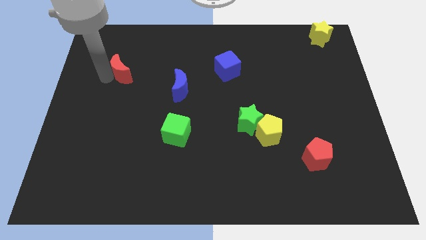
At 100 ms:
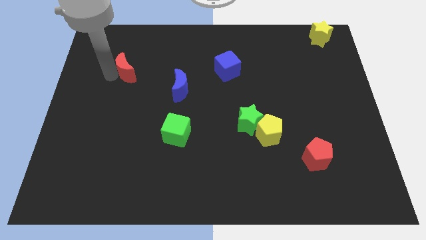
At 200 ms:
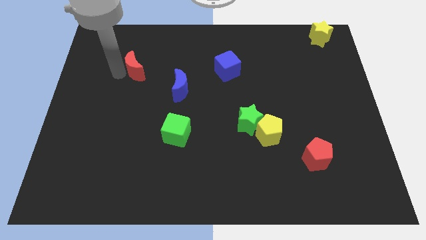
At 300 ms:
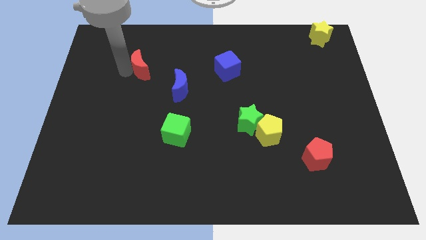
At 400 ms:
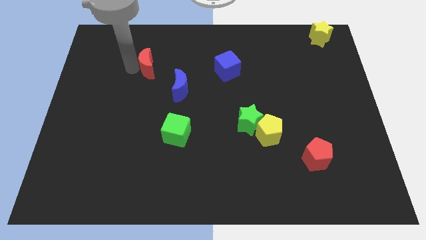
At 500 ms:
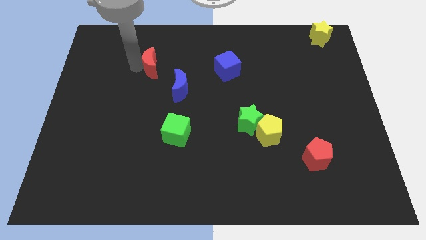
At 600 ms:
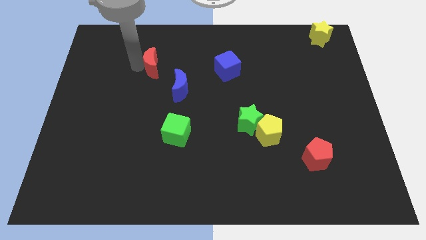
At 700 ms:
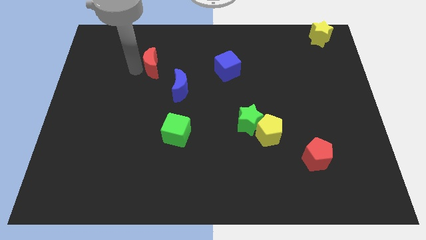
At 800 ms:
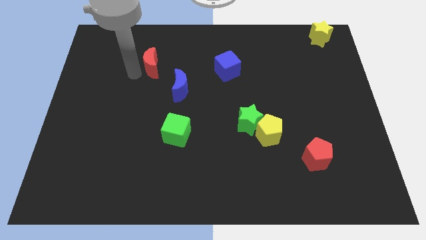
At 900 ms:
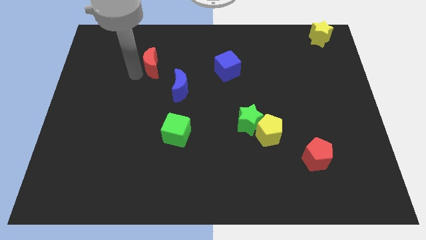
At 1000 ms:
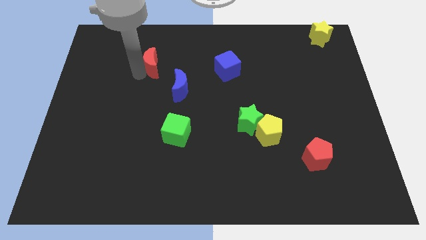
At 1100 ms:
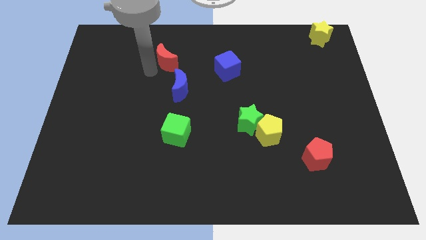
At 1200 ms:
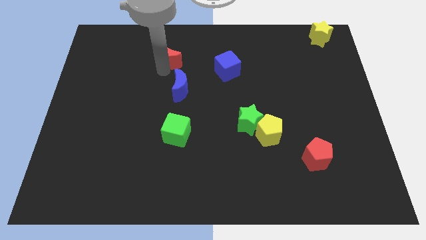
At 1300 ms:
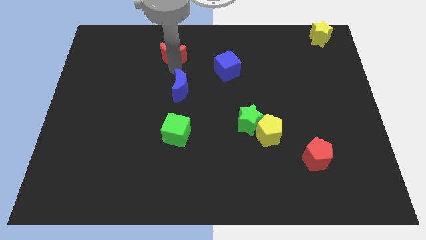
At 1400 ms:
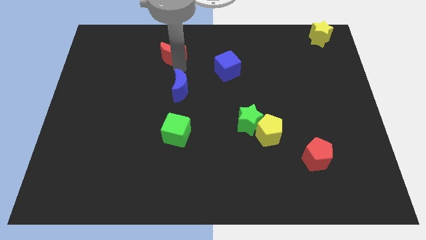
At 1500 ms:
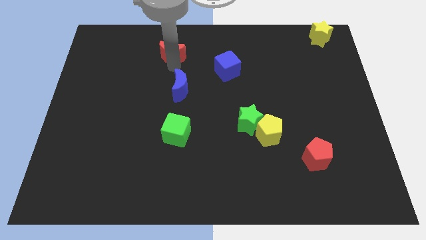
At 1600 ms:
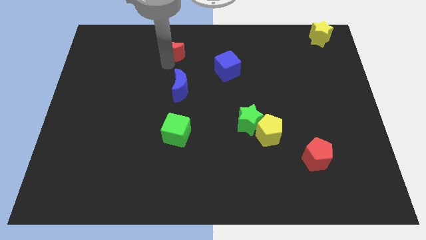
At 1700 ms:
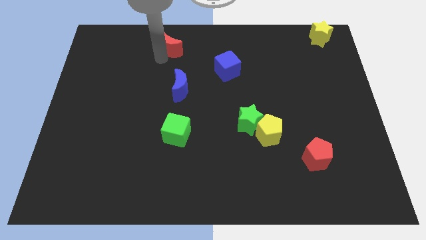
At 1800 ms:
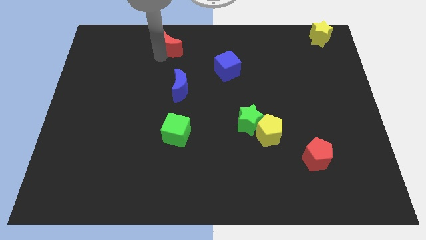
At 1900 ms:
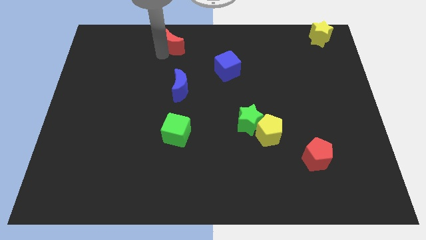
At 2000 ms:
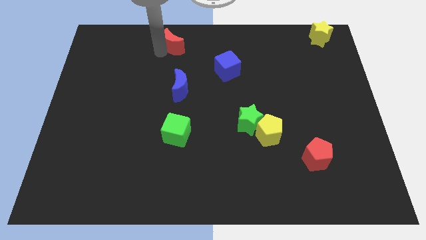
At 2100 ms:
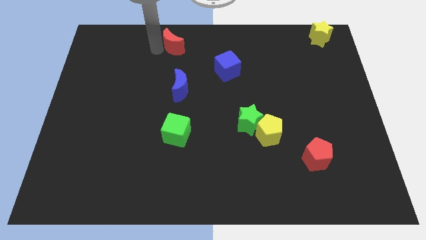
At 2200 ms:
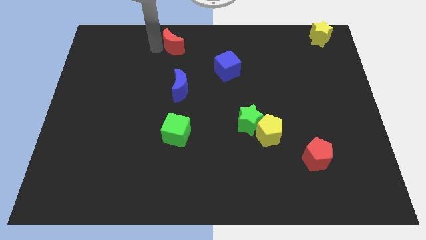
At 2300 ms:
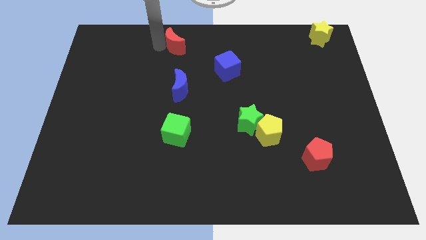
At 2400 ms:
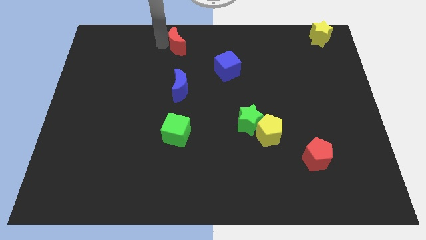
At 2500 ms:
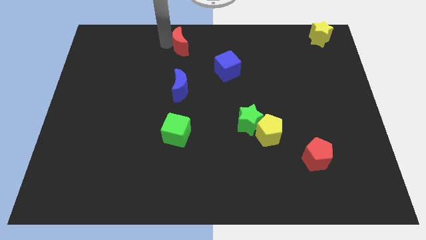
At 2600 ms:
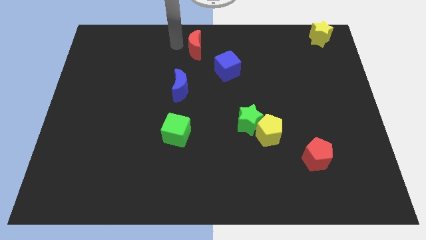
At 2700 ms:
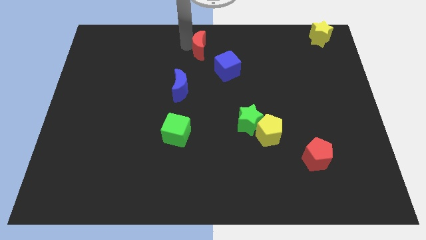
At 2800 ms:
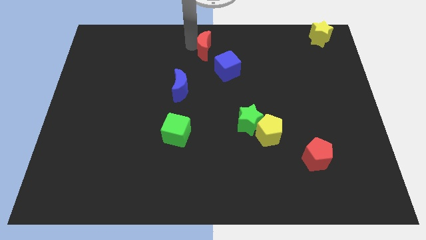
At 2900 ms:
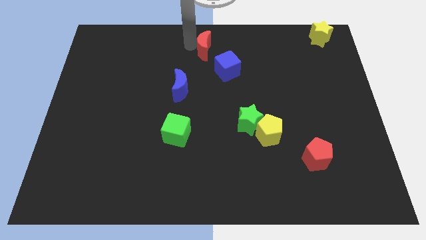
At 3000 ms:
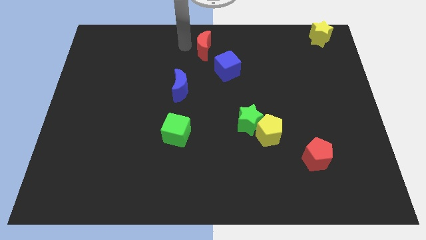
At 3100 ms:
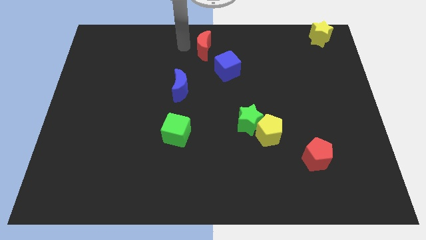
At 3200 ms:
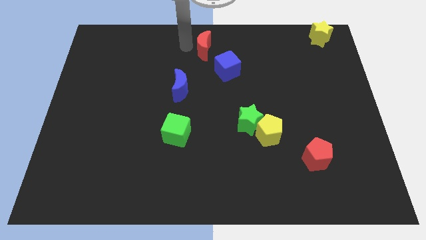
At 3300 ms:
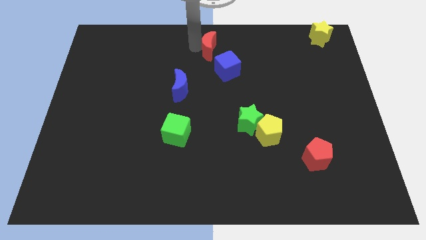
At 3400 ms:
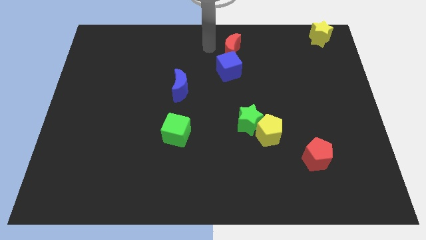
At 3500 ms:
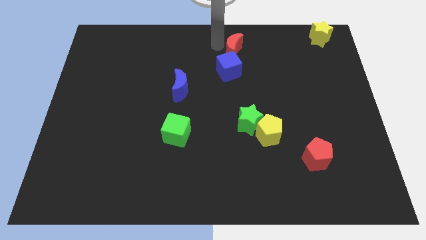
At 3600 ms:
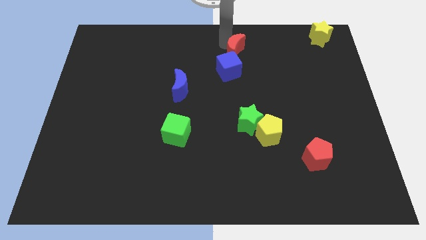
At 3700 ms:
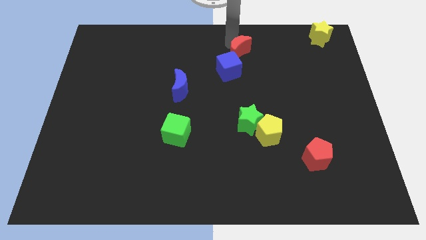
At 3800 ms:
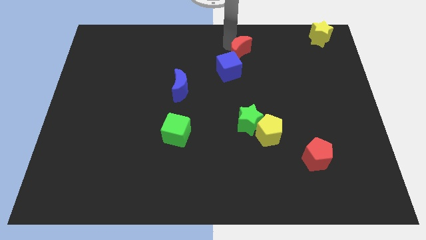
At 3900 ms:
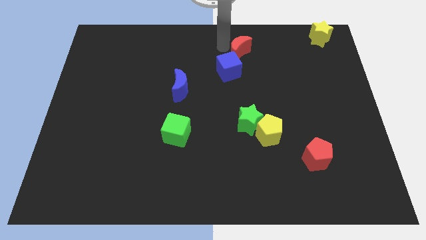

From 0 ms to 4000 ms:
put the red crescent to the top right side of the blue cube

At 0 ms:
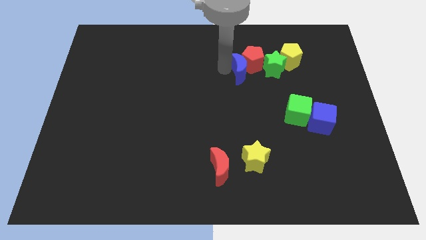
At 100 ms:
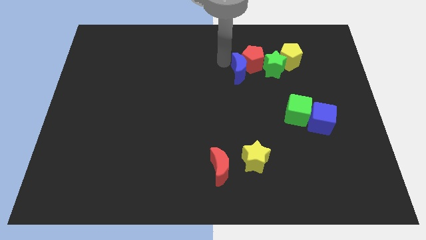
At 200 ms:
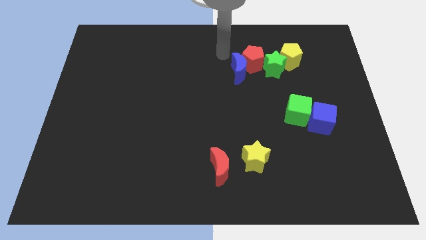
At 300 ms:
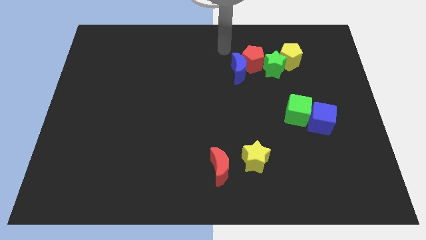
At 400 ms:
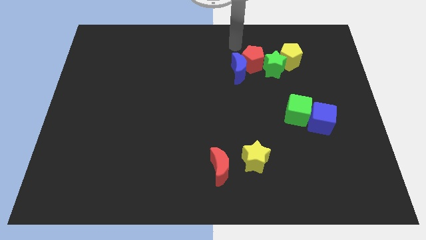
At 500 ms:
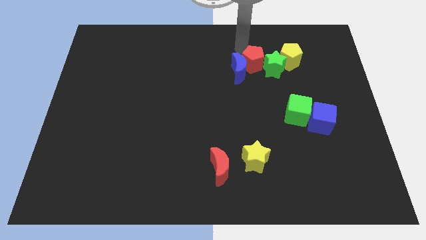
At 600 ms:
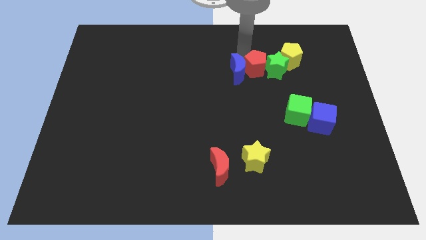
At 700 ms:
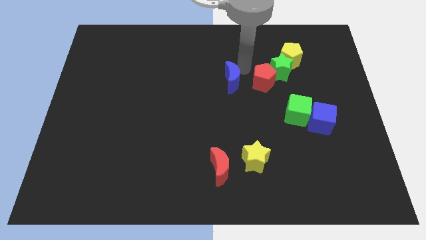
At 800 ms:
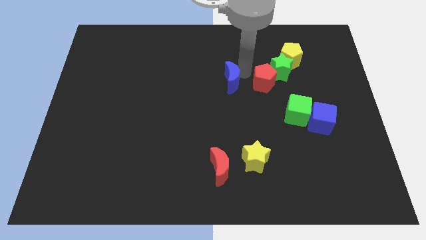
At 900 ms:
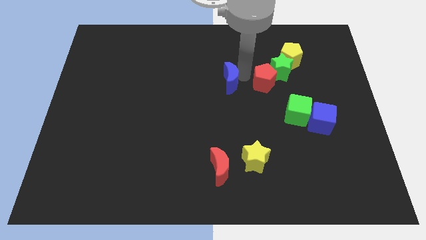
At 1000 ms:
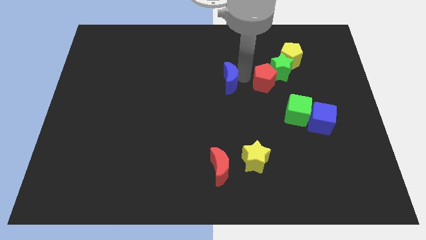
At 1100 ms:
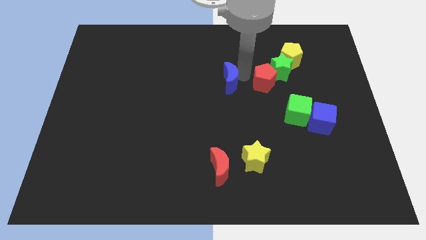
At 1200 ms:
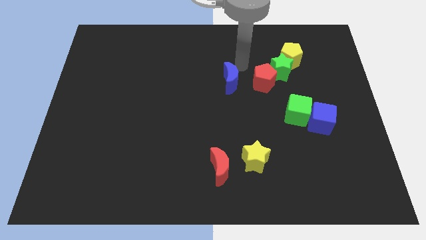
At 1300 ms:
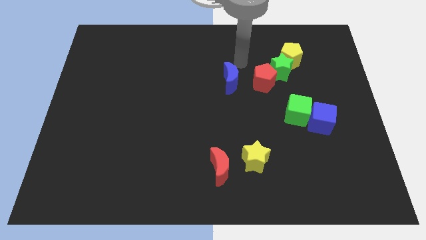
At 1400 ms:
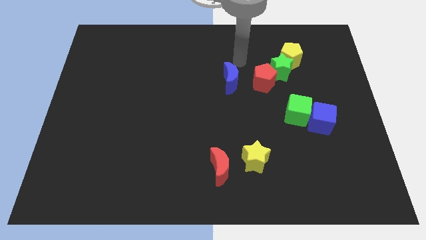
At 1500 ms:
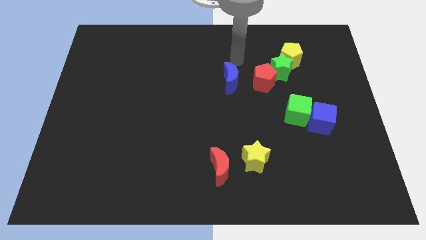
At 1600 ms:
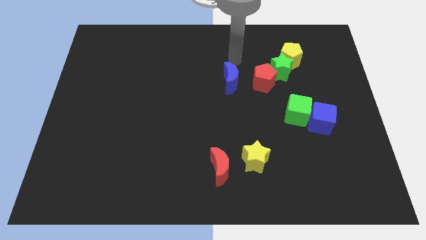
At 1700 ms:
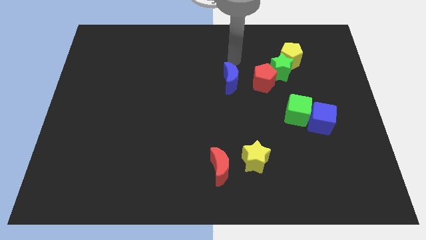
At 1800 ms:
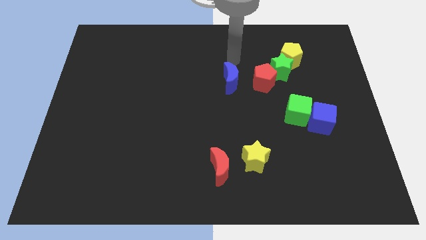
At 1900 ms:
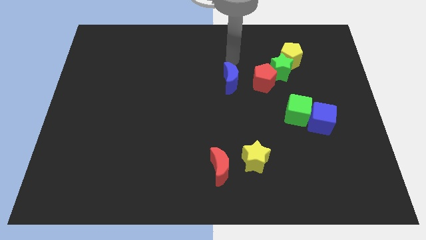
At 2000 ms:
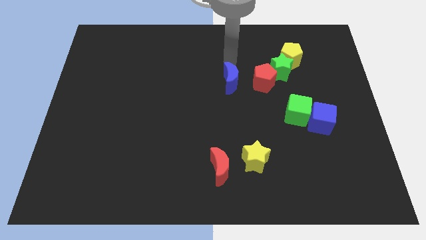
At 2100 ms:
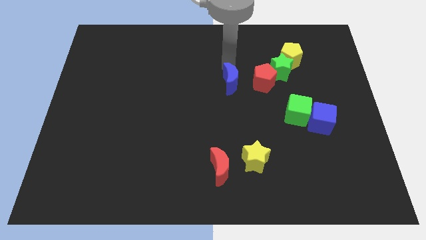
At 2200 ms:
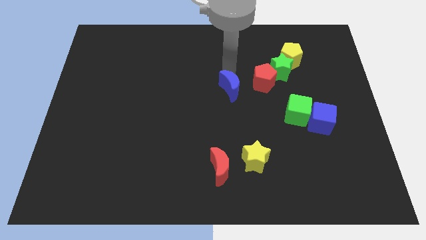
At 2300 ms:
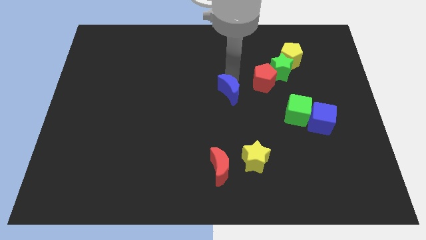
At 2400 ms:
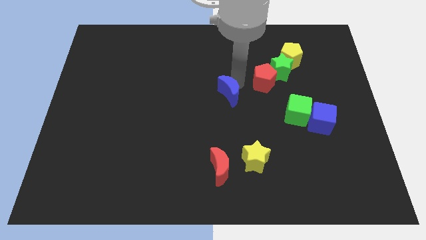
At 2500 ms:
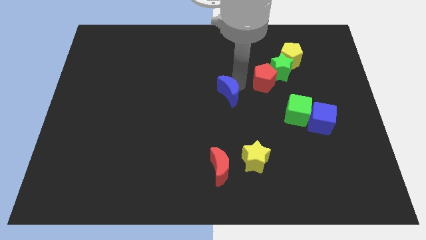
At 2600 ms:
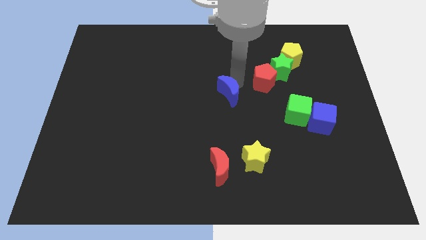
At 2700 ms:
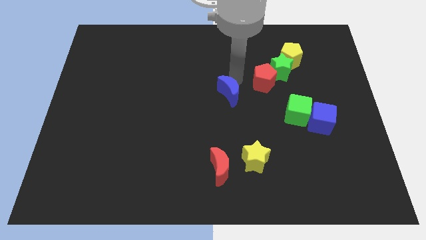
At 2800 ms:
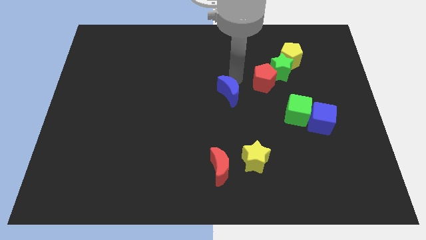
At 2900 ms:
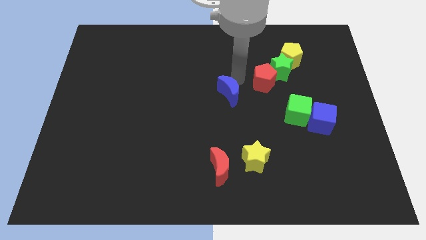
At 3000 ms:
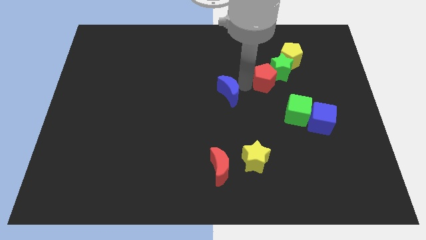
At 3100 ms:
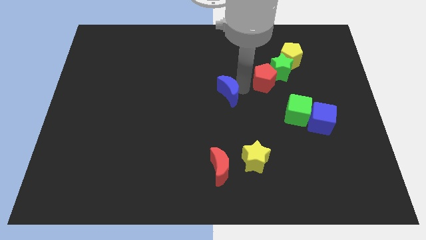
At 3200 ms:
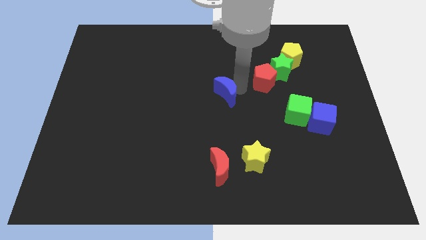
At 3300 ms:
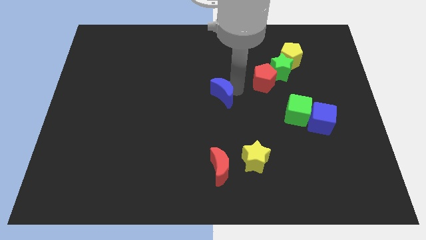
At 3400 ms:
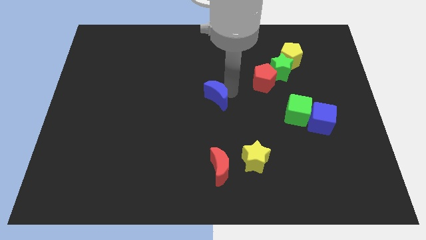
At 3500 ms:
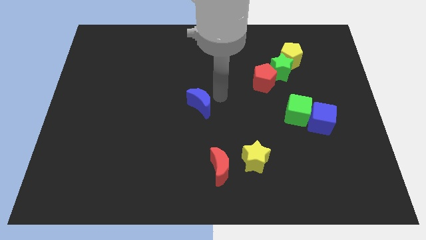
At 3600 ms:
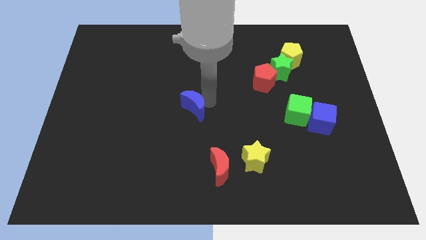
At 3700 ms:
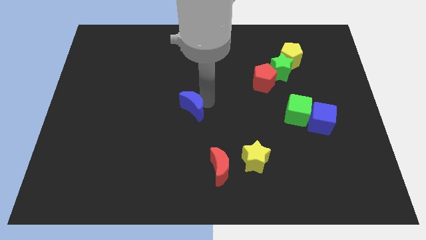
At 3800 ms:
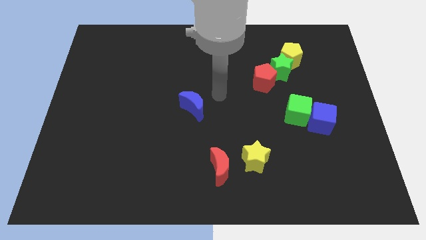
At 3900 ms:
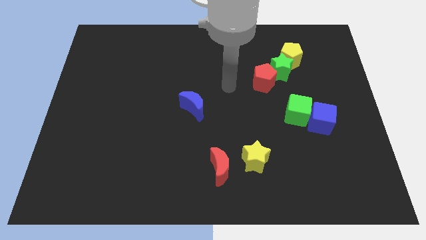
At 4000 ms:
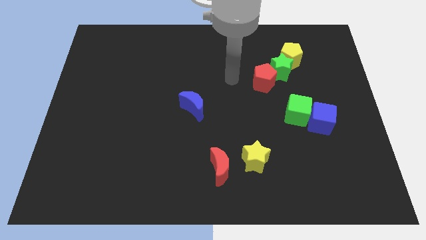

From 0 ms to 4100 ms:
place the blue moon diagonally top left to the red moon

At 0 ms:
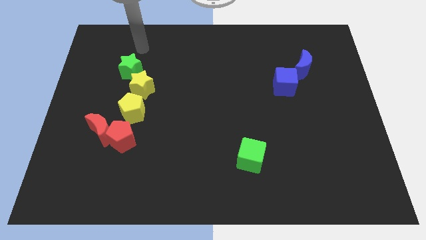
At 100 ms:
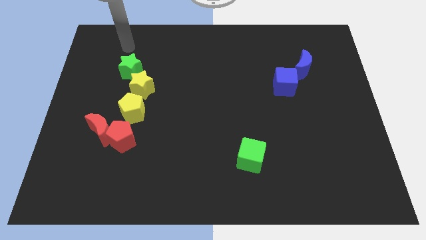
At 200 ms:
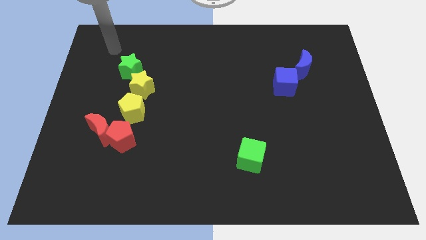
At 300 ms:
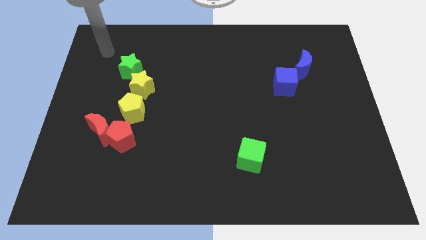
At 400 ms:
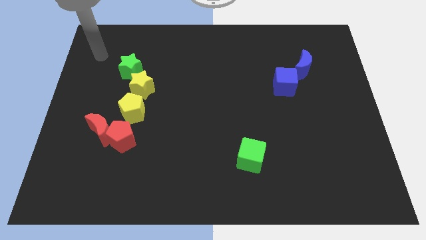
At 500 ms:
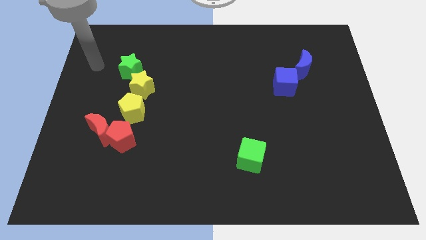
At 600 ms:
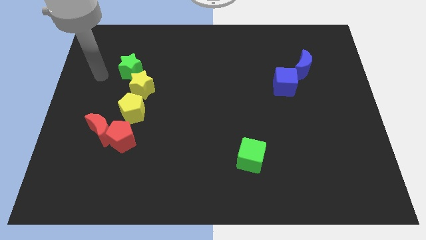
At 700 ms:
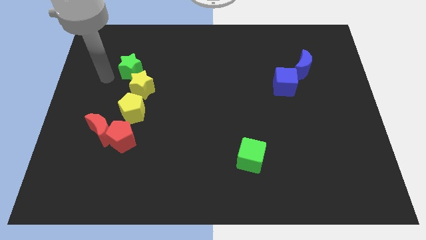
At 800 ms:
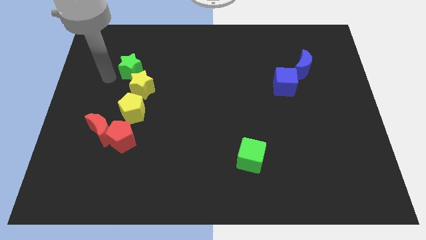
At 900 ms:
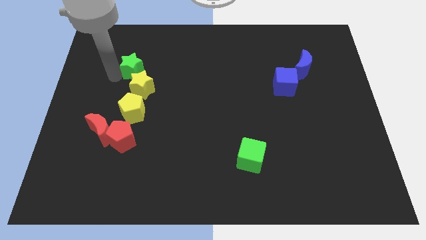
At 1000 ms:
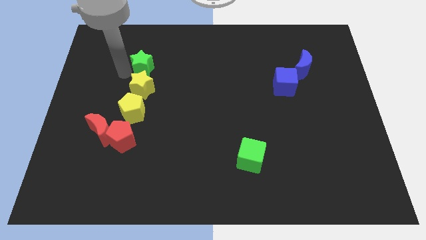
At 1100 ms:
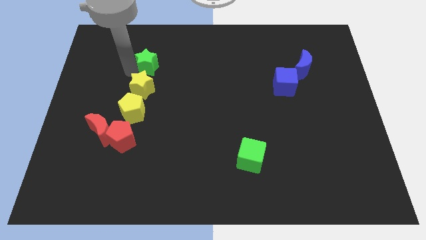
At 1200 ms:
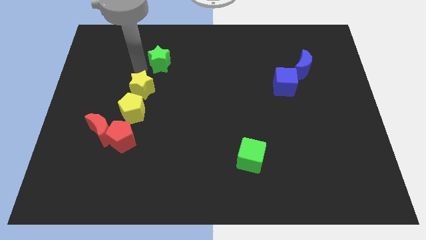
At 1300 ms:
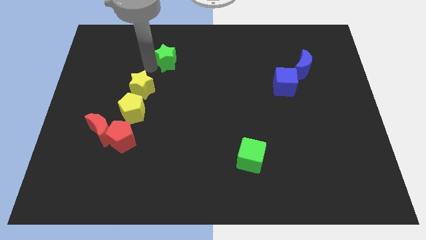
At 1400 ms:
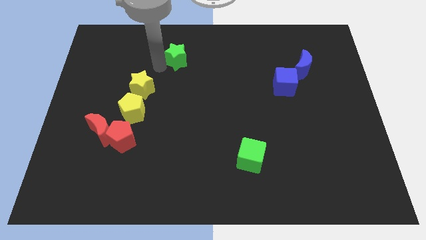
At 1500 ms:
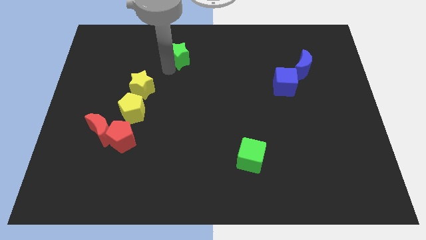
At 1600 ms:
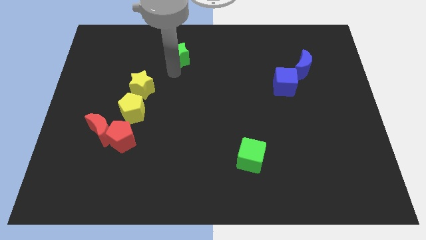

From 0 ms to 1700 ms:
separate the green star from the yellow star
